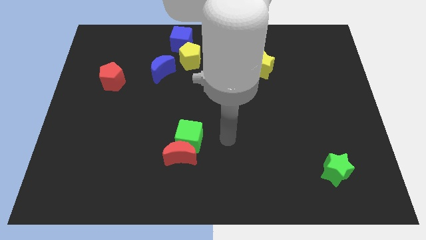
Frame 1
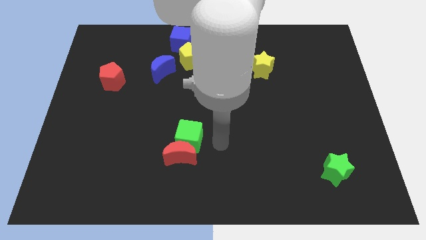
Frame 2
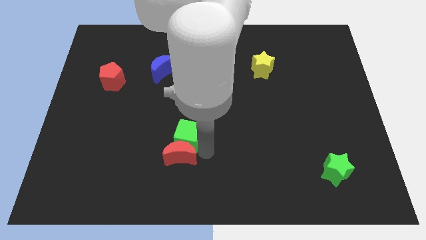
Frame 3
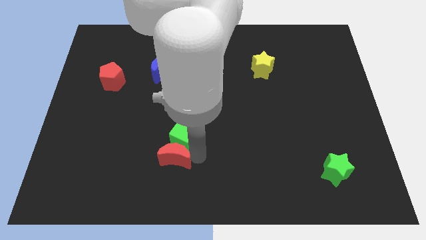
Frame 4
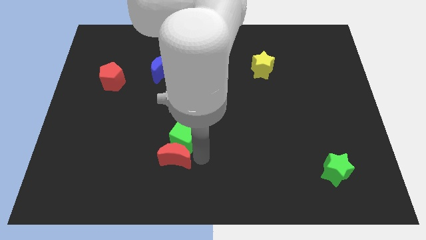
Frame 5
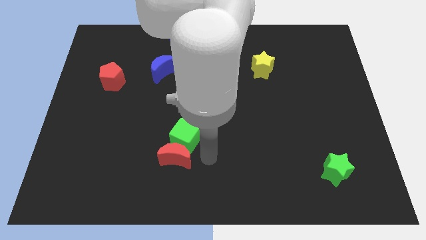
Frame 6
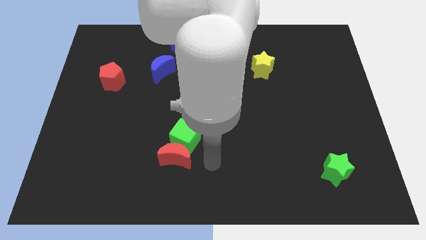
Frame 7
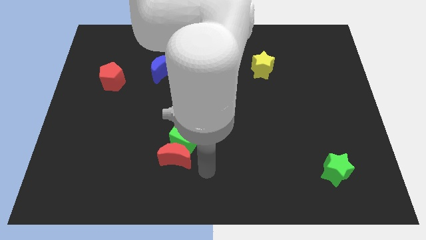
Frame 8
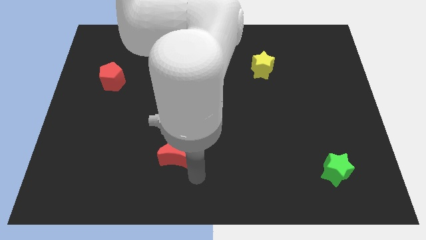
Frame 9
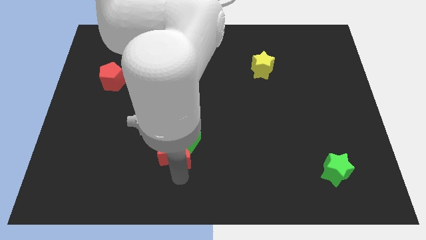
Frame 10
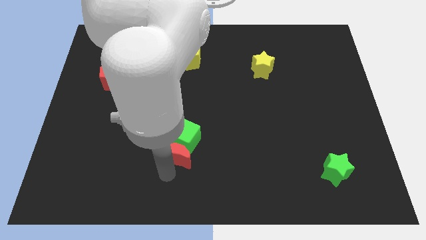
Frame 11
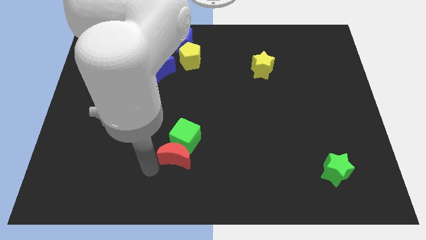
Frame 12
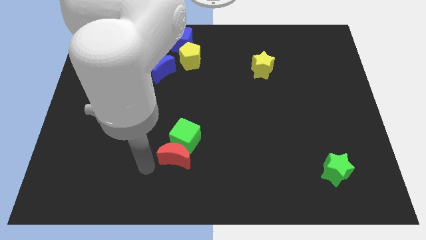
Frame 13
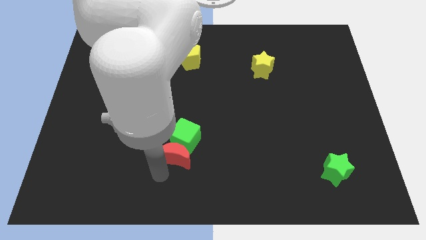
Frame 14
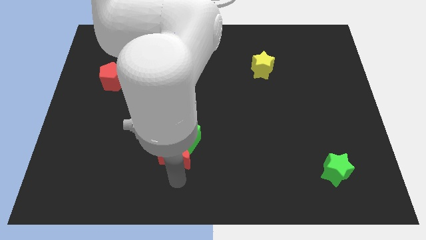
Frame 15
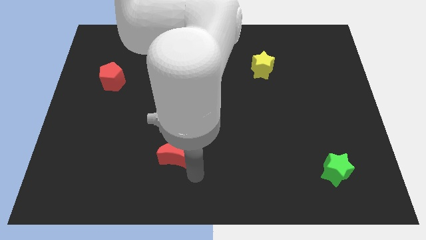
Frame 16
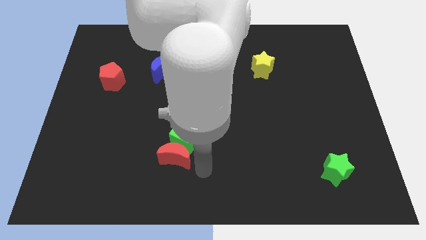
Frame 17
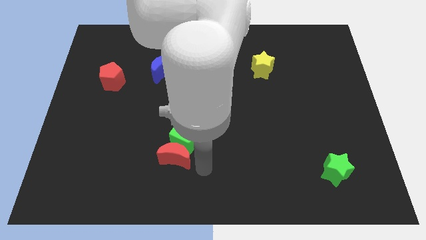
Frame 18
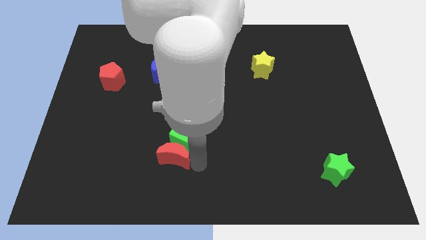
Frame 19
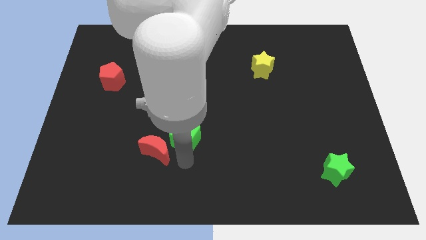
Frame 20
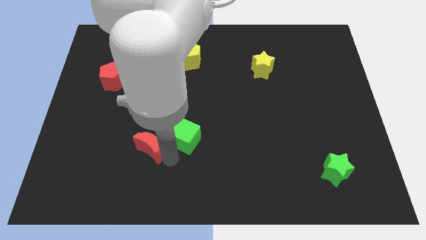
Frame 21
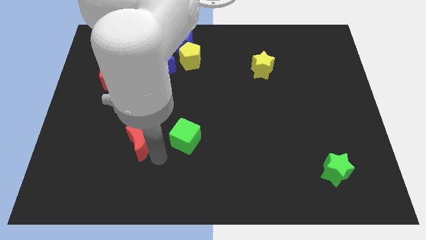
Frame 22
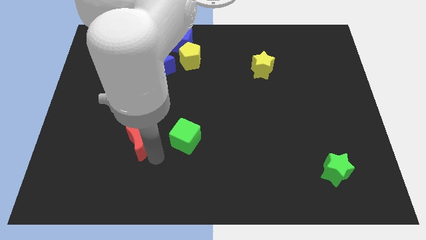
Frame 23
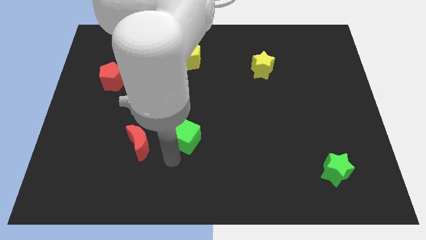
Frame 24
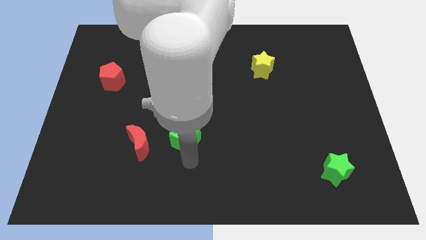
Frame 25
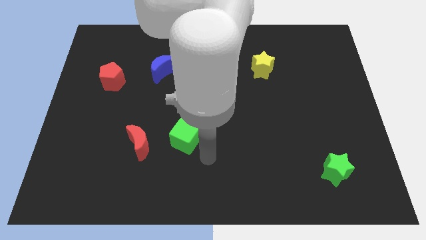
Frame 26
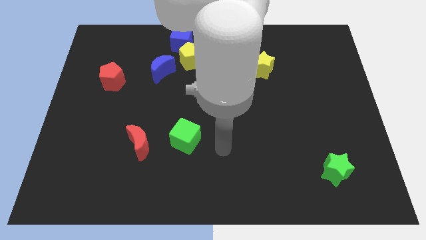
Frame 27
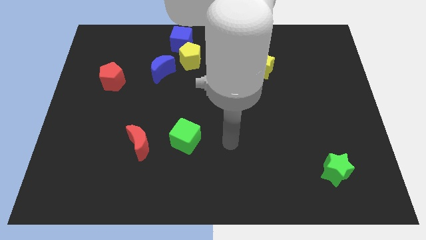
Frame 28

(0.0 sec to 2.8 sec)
separate the red crescent from green cube

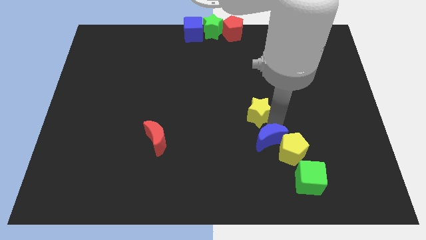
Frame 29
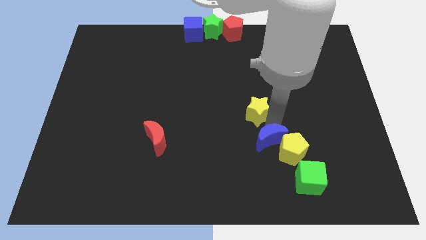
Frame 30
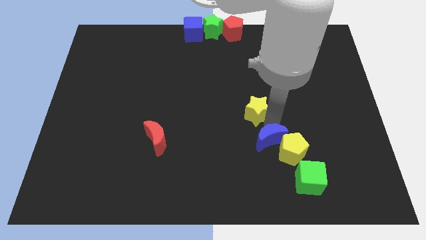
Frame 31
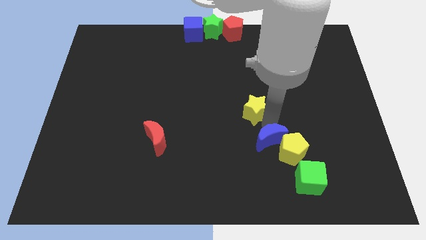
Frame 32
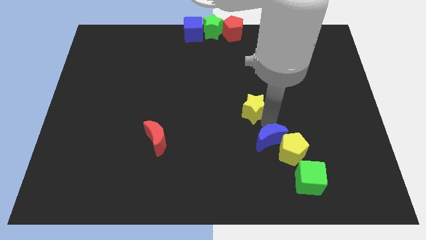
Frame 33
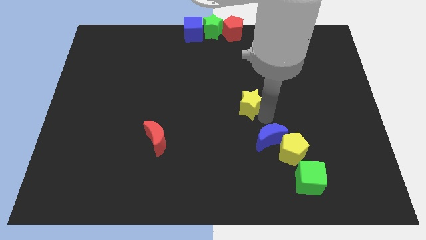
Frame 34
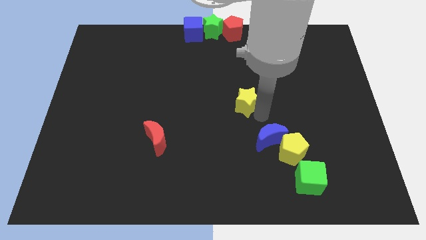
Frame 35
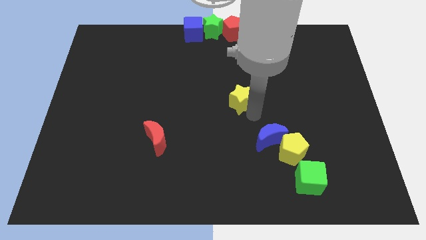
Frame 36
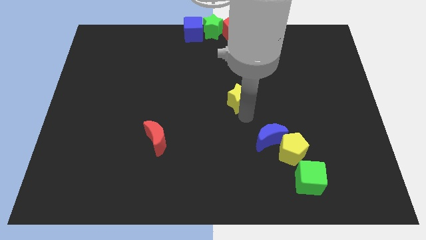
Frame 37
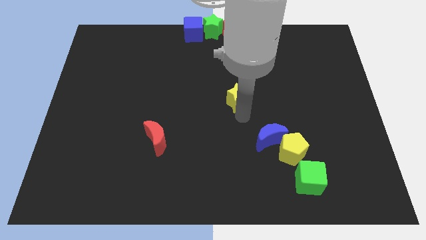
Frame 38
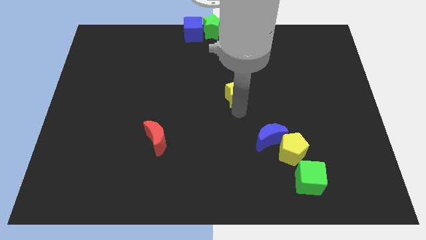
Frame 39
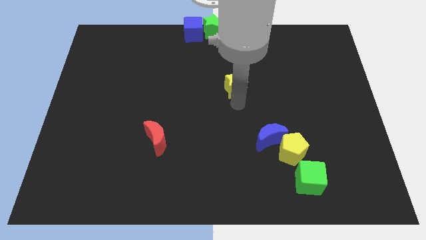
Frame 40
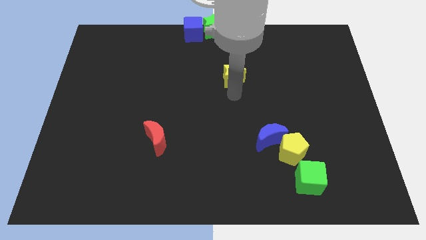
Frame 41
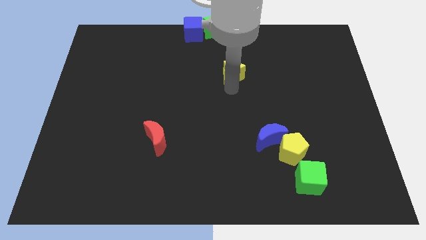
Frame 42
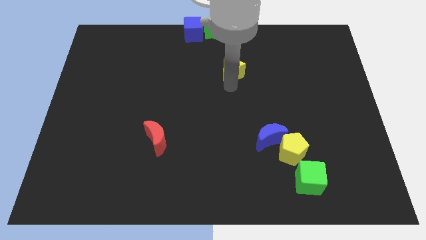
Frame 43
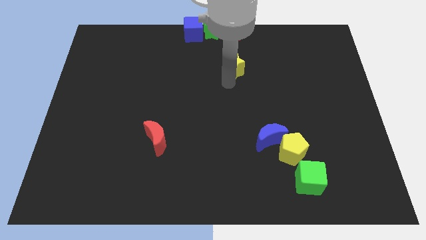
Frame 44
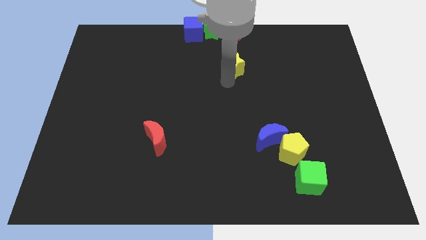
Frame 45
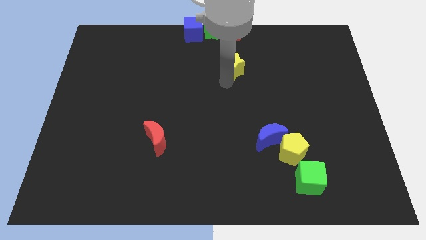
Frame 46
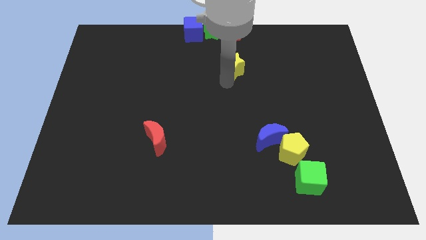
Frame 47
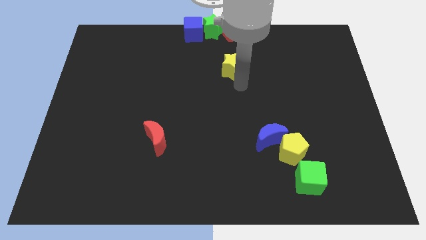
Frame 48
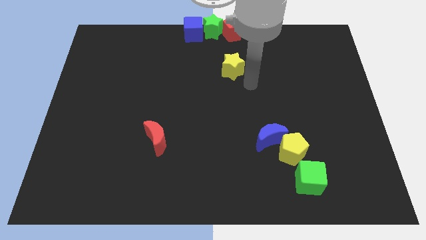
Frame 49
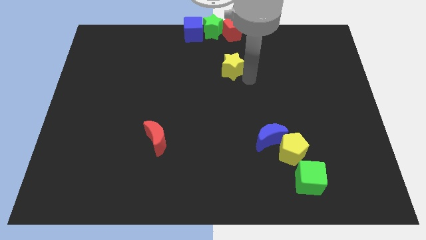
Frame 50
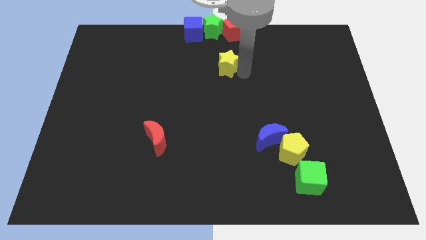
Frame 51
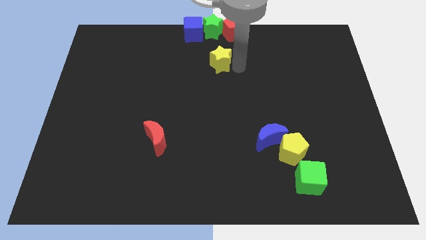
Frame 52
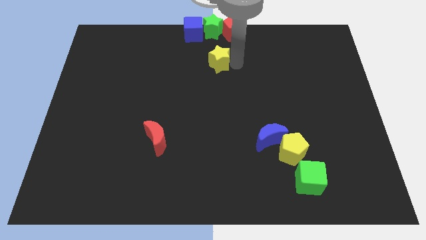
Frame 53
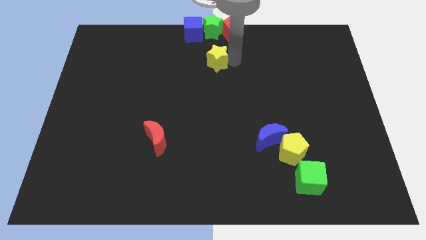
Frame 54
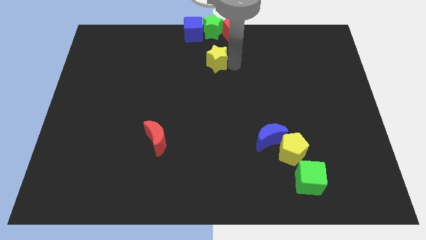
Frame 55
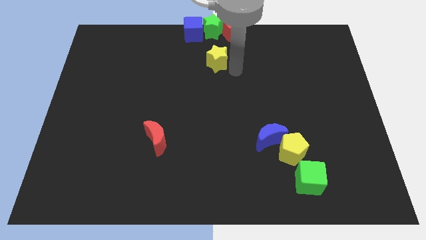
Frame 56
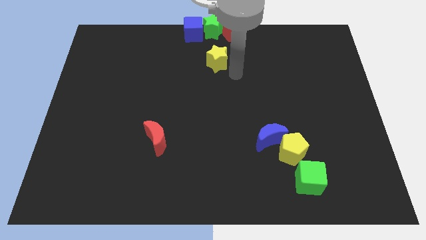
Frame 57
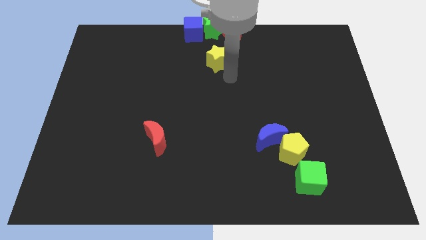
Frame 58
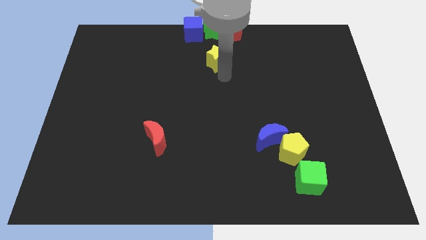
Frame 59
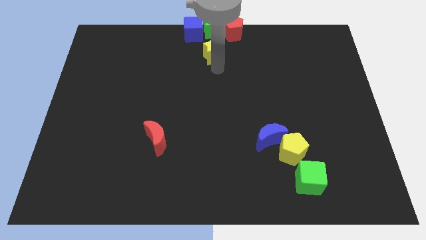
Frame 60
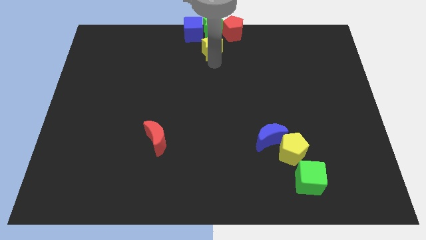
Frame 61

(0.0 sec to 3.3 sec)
push yellow star below green star

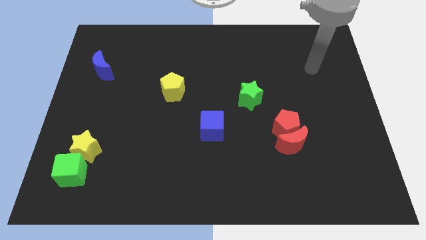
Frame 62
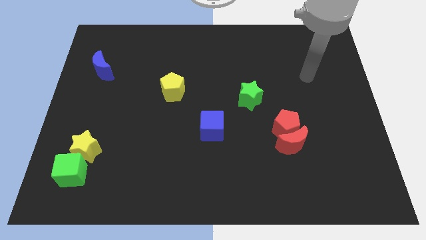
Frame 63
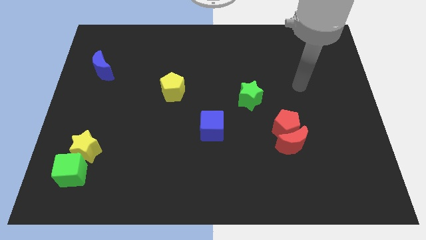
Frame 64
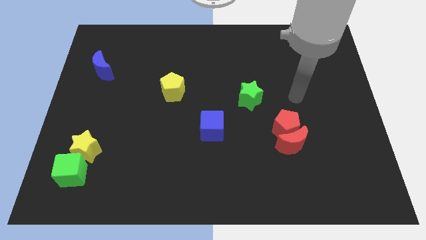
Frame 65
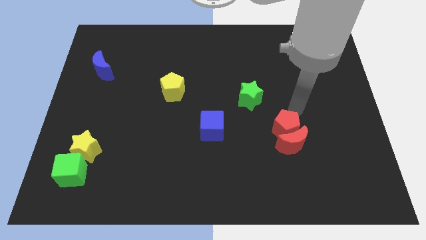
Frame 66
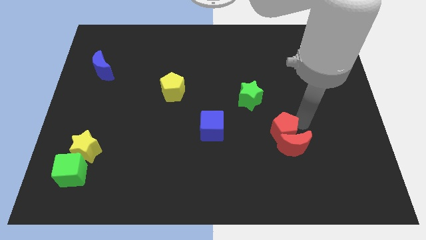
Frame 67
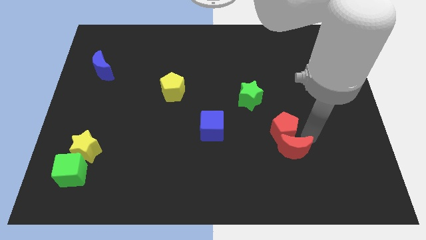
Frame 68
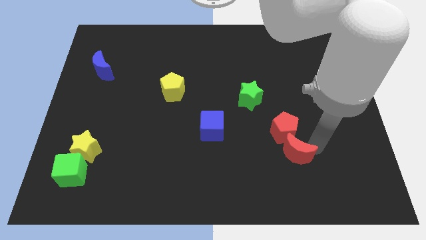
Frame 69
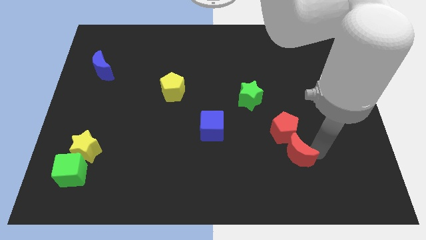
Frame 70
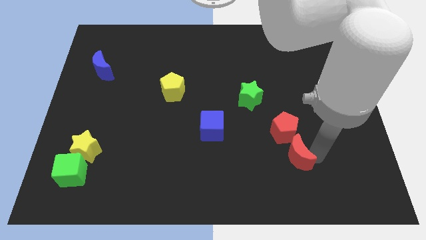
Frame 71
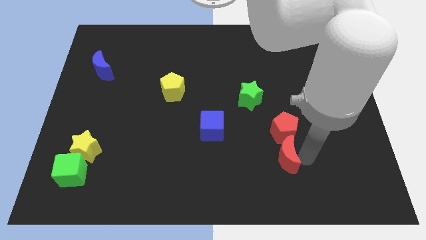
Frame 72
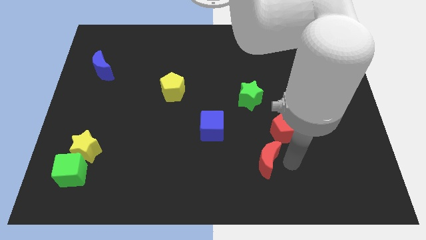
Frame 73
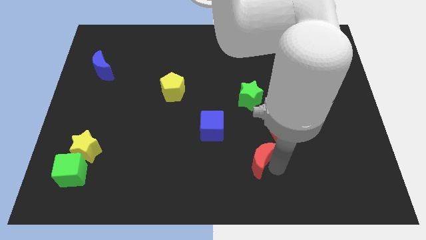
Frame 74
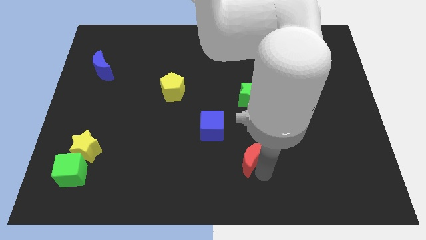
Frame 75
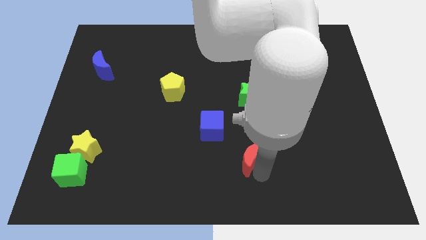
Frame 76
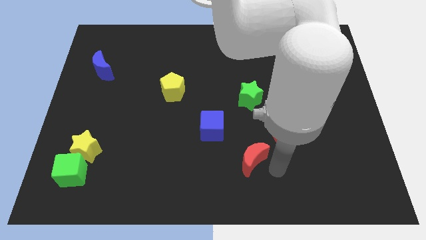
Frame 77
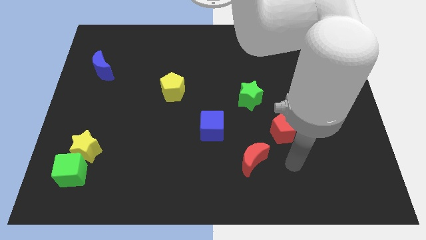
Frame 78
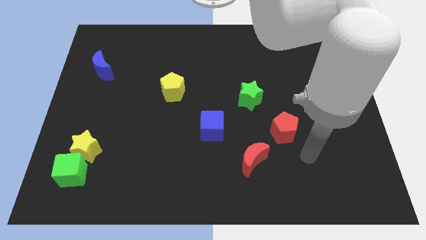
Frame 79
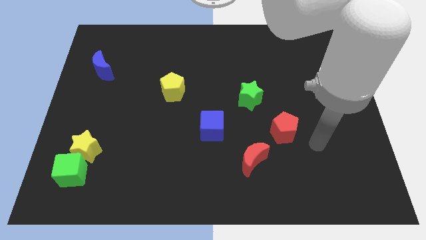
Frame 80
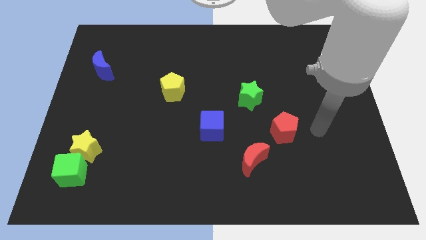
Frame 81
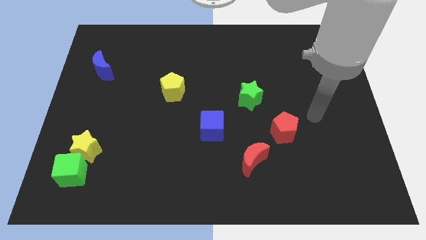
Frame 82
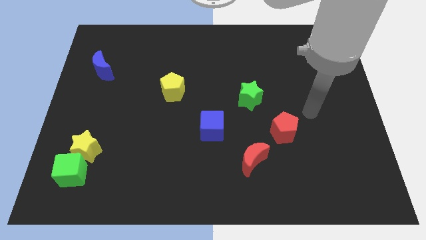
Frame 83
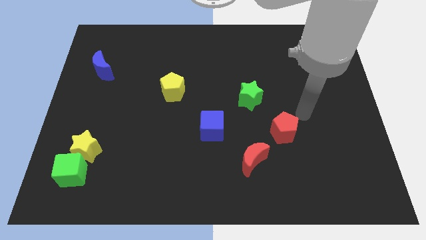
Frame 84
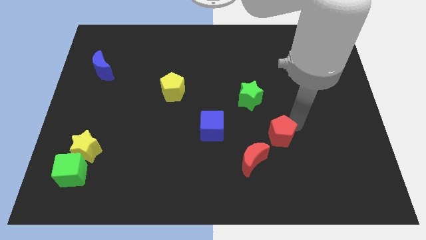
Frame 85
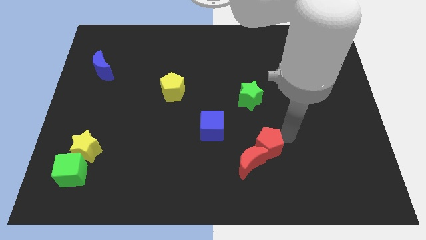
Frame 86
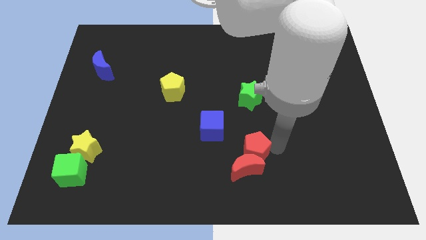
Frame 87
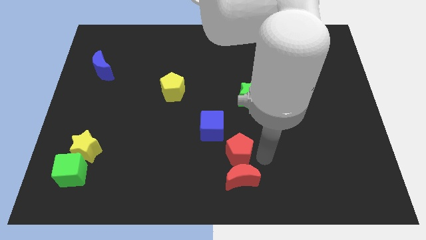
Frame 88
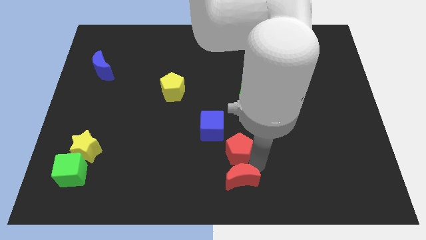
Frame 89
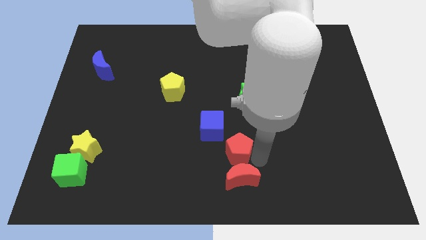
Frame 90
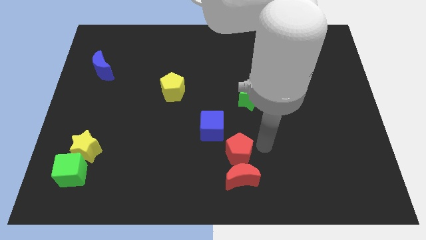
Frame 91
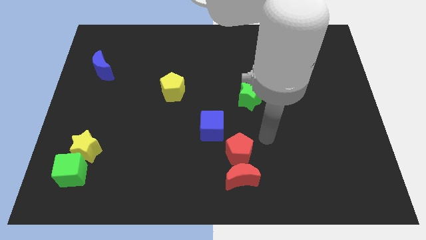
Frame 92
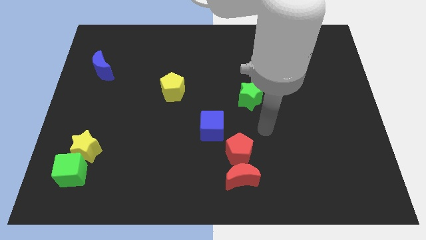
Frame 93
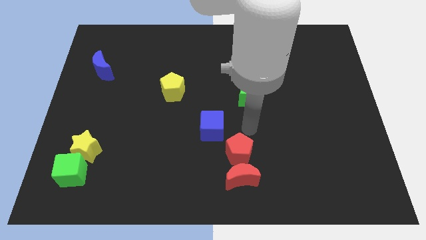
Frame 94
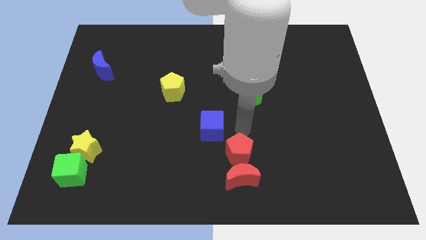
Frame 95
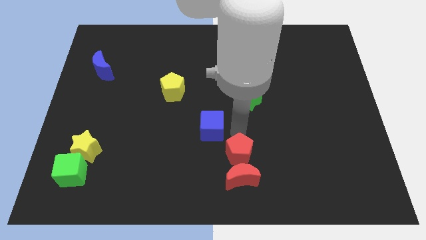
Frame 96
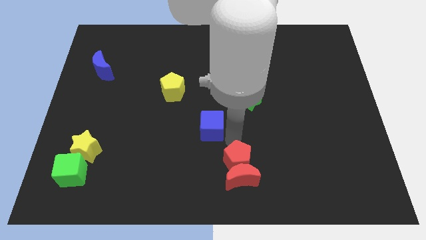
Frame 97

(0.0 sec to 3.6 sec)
push the red blocks to the bottom right of the blue cube
